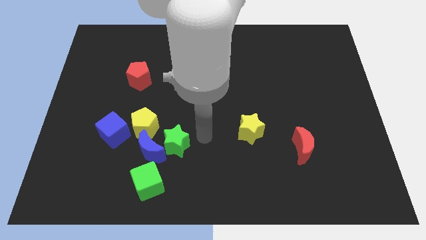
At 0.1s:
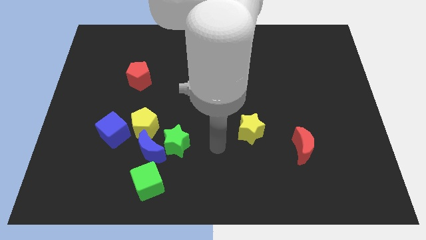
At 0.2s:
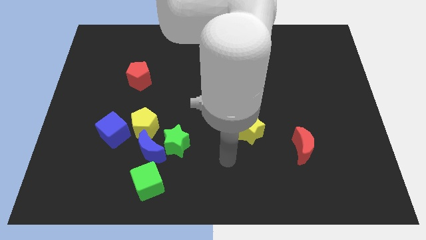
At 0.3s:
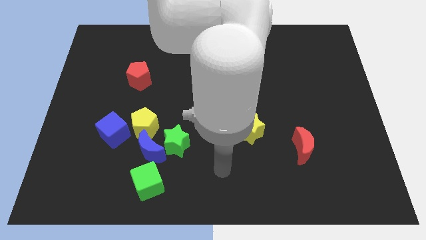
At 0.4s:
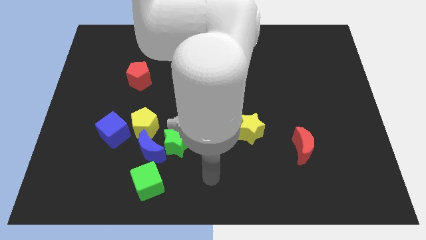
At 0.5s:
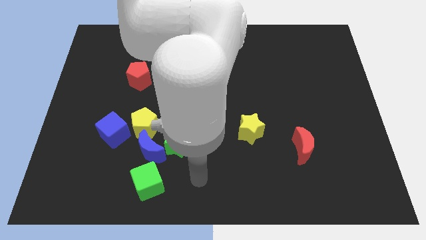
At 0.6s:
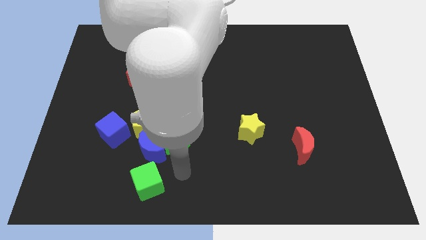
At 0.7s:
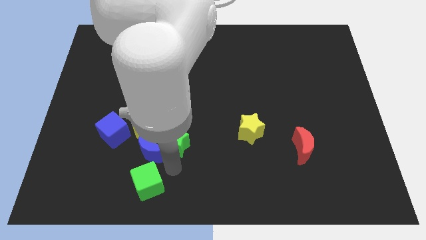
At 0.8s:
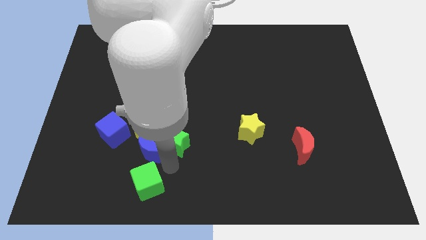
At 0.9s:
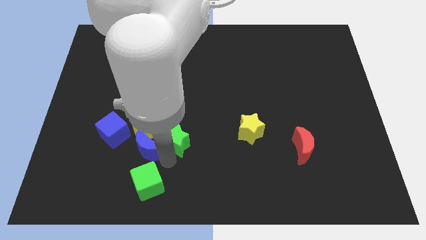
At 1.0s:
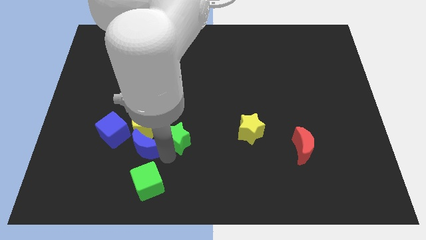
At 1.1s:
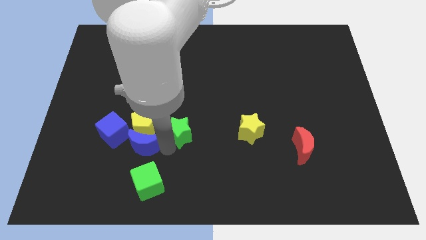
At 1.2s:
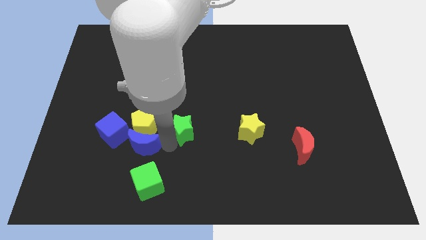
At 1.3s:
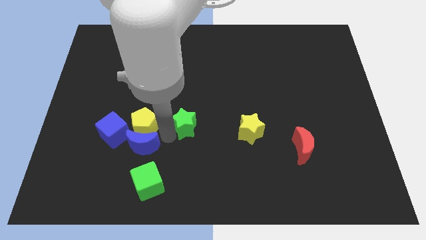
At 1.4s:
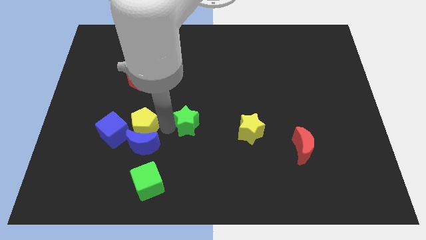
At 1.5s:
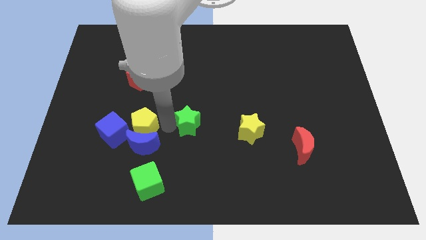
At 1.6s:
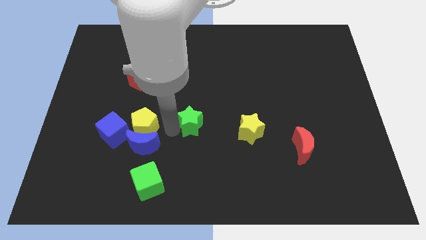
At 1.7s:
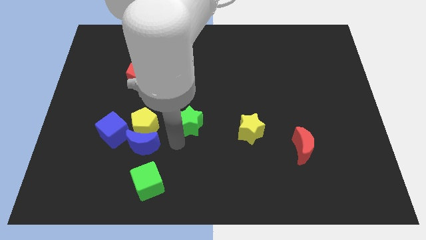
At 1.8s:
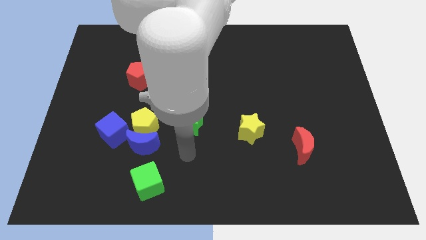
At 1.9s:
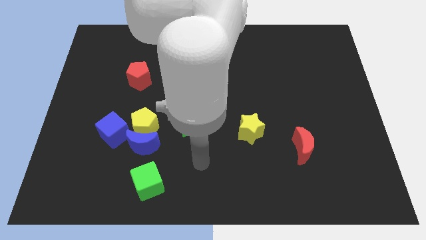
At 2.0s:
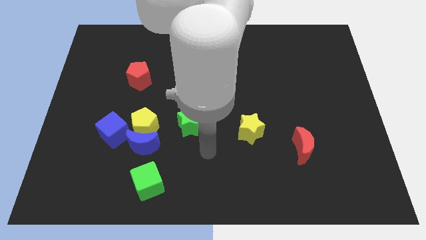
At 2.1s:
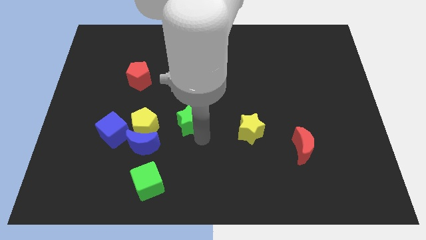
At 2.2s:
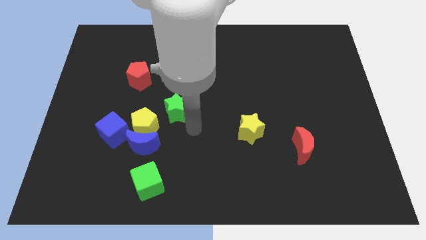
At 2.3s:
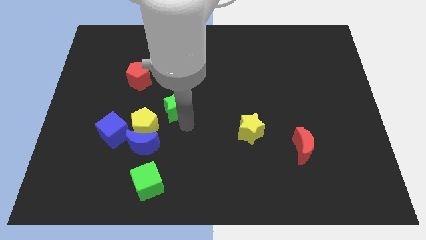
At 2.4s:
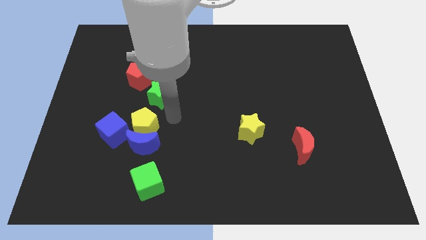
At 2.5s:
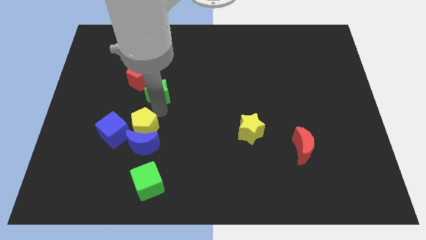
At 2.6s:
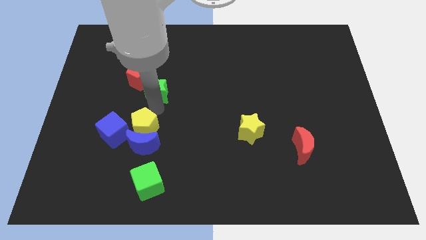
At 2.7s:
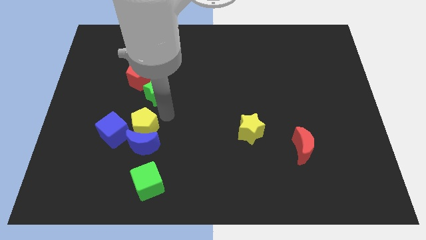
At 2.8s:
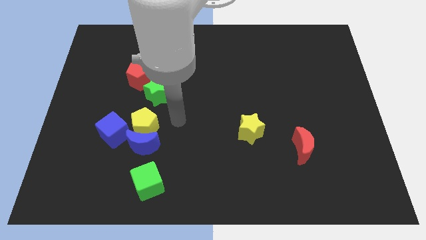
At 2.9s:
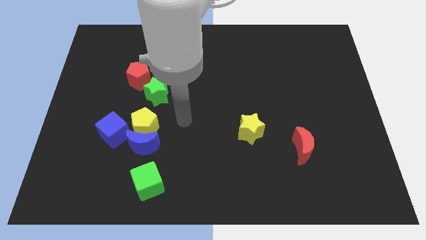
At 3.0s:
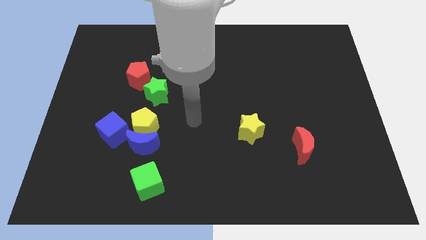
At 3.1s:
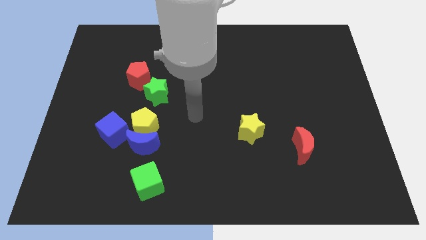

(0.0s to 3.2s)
push the green star into the red pentagon

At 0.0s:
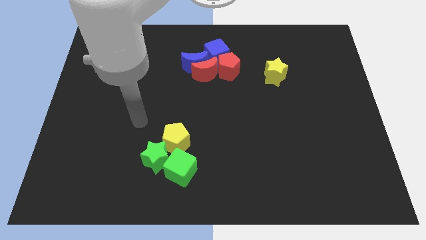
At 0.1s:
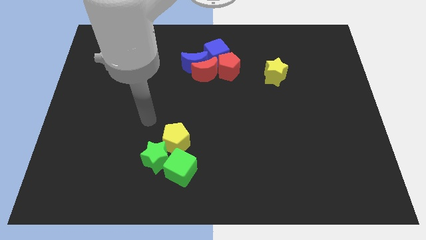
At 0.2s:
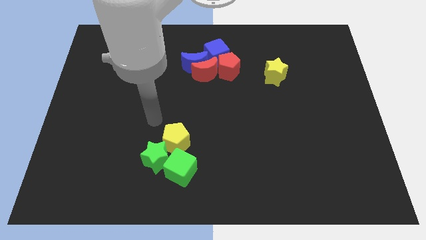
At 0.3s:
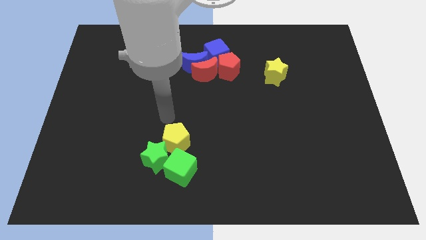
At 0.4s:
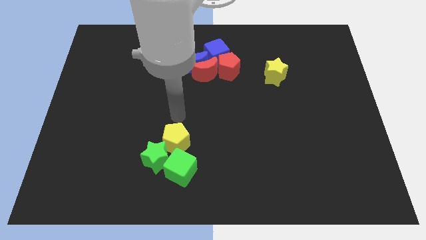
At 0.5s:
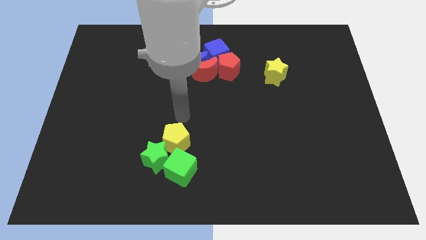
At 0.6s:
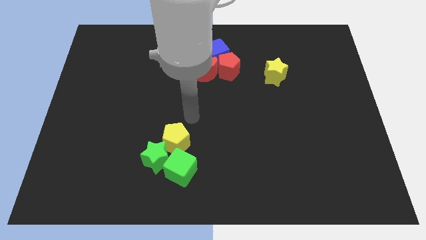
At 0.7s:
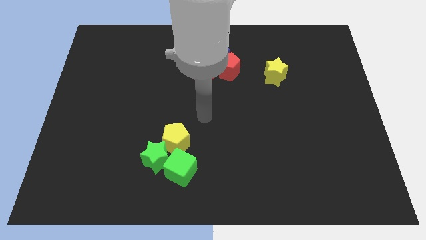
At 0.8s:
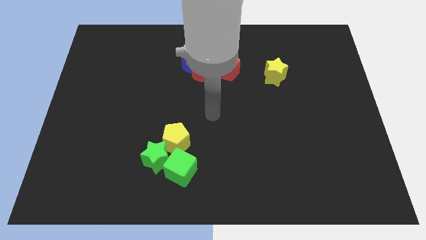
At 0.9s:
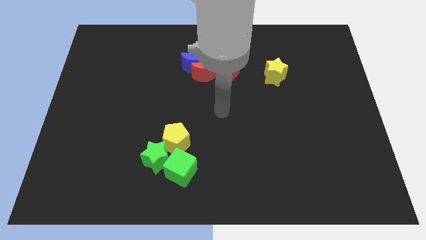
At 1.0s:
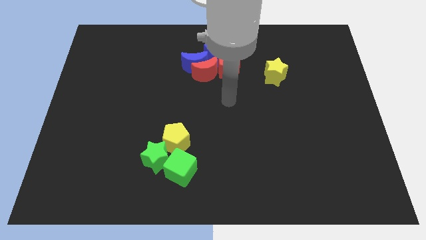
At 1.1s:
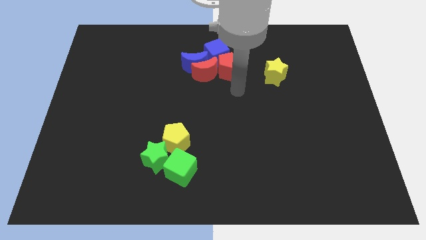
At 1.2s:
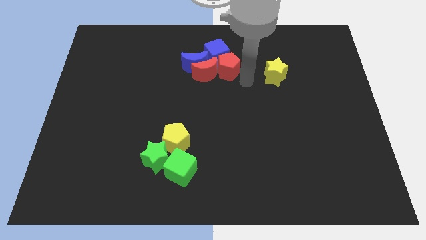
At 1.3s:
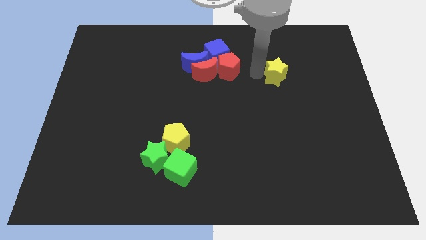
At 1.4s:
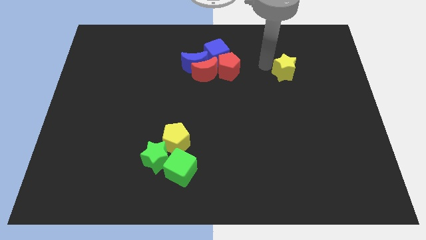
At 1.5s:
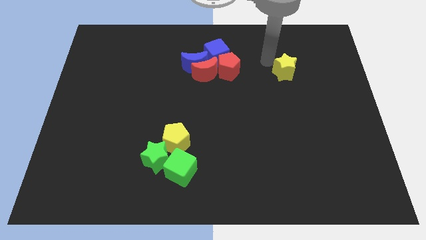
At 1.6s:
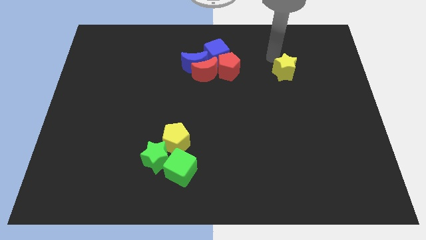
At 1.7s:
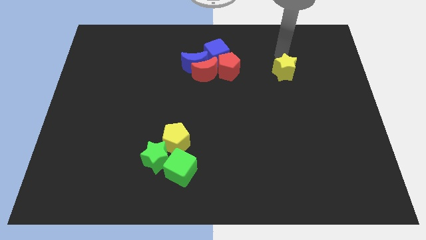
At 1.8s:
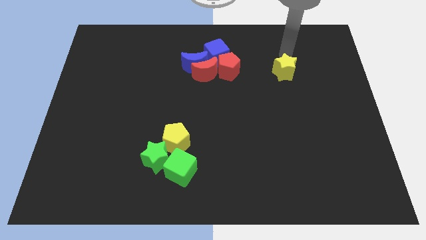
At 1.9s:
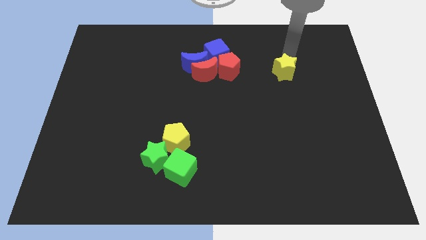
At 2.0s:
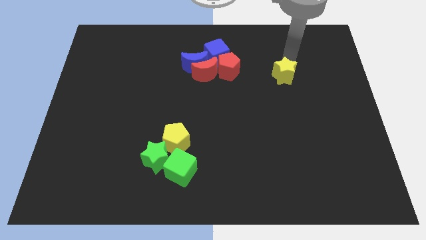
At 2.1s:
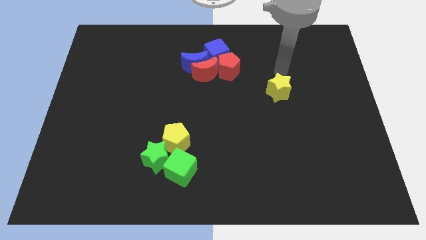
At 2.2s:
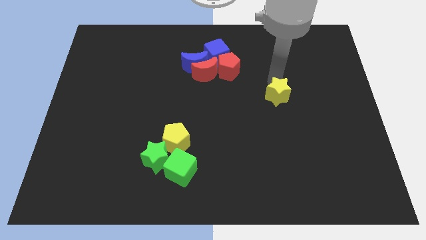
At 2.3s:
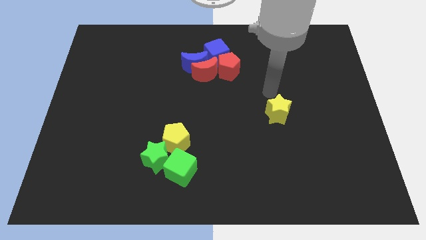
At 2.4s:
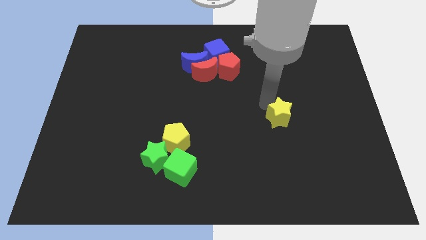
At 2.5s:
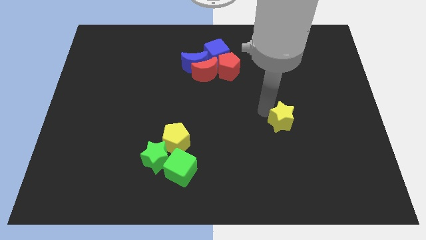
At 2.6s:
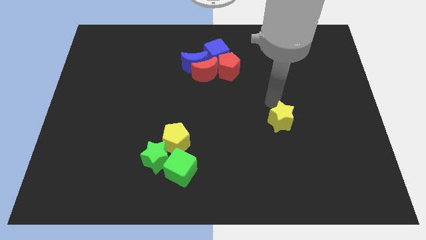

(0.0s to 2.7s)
move the yellow star diagonally right of the red blocks

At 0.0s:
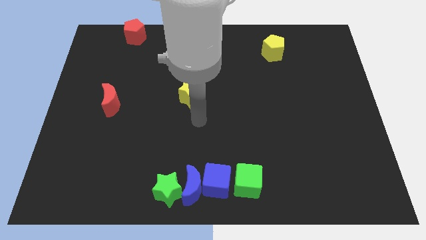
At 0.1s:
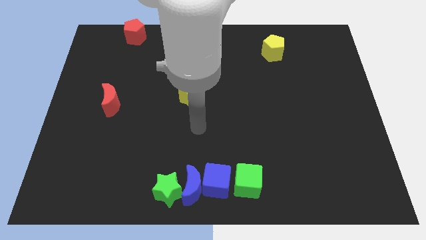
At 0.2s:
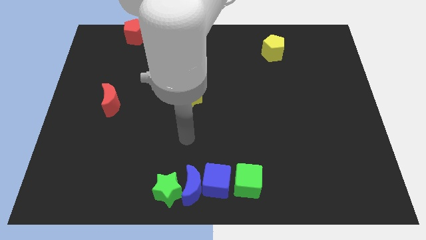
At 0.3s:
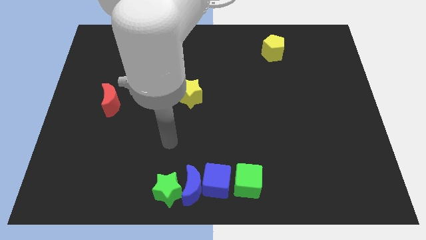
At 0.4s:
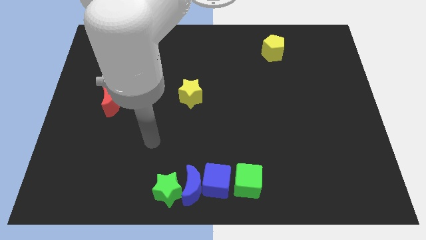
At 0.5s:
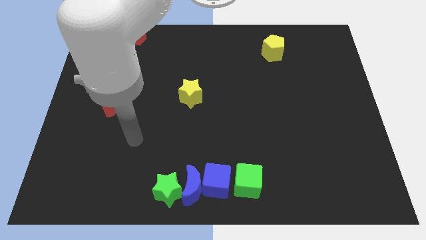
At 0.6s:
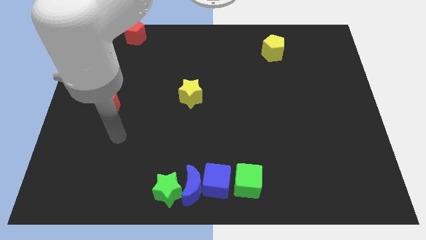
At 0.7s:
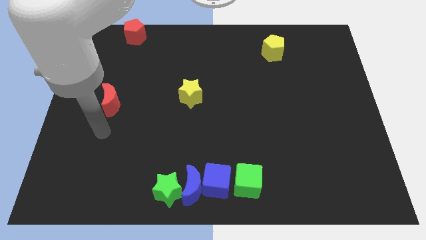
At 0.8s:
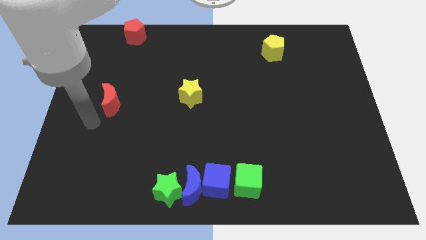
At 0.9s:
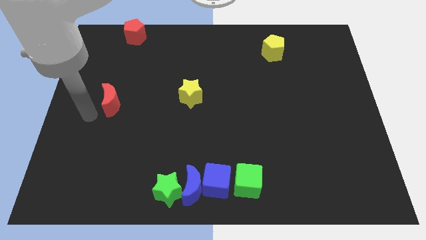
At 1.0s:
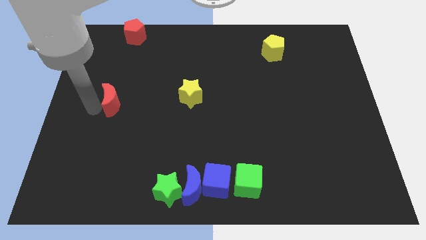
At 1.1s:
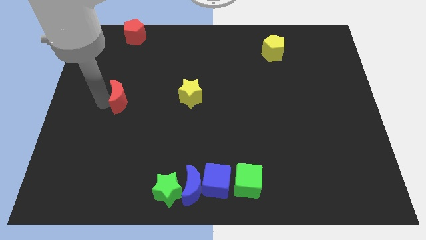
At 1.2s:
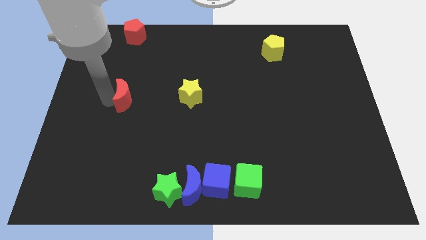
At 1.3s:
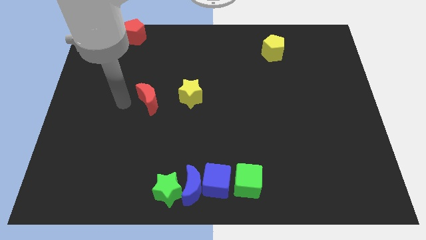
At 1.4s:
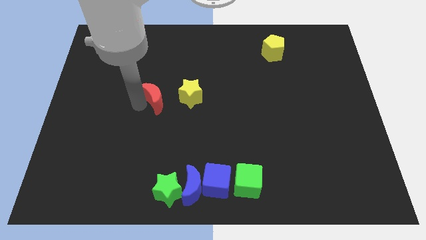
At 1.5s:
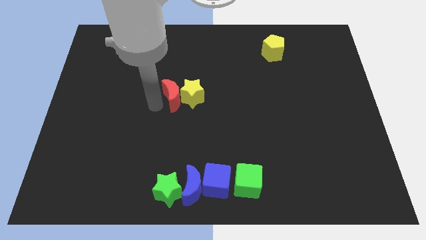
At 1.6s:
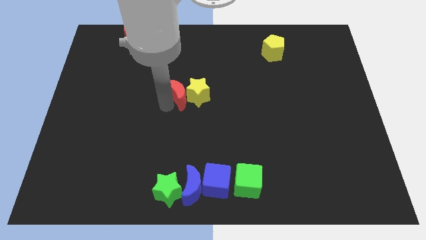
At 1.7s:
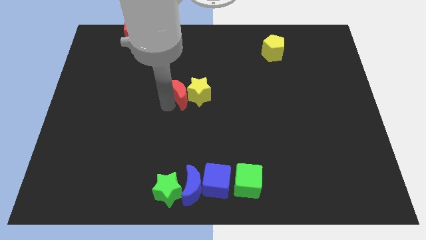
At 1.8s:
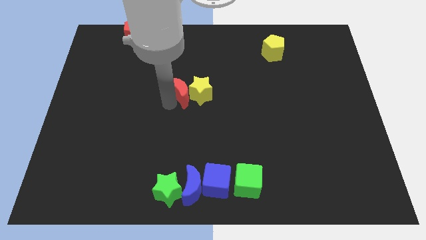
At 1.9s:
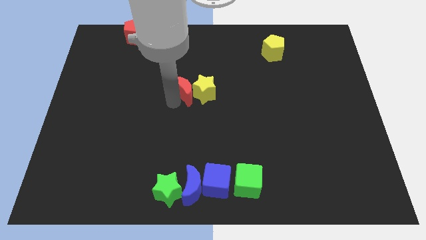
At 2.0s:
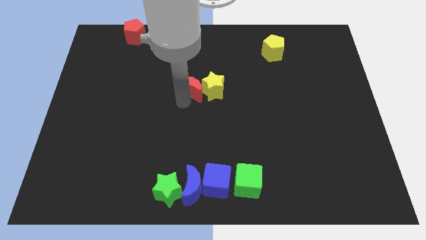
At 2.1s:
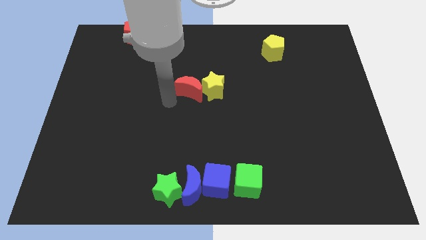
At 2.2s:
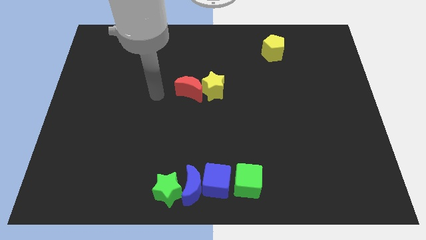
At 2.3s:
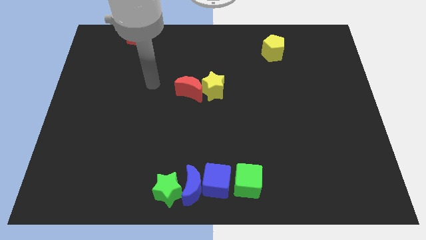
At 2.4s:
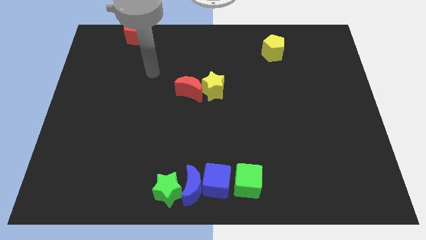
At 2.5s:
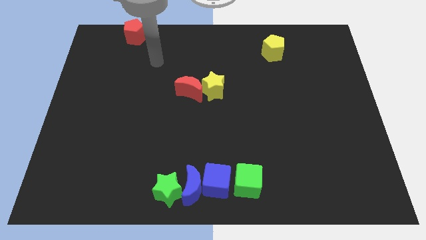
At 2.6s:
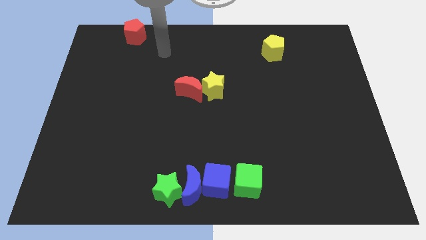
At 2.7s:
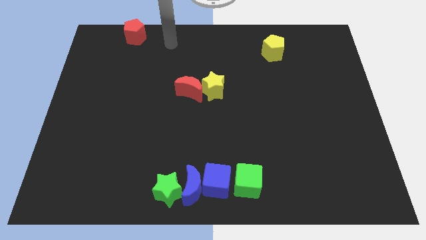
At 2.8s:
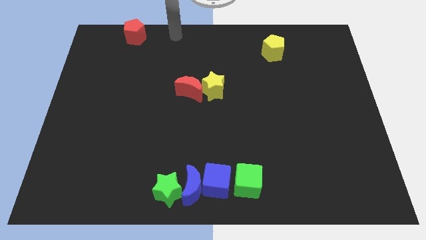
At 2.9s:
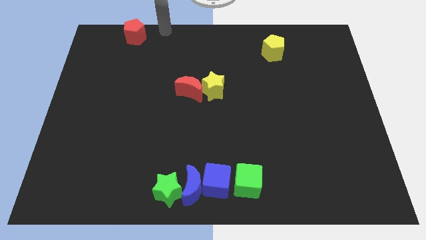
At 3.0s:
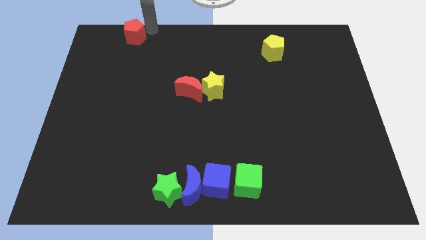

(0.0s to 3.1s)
push the red moon into the yellow star
